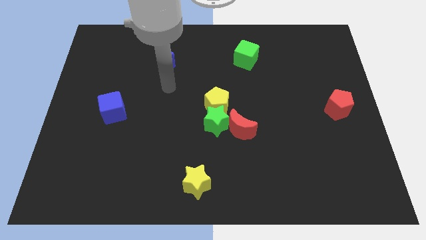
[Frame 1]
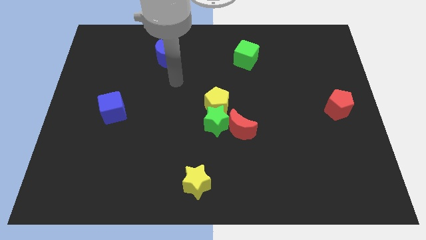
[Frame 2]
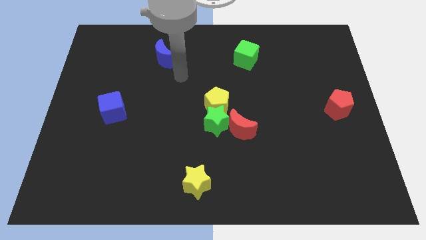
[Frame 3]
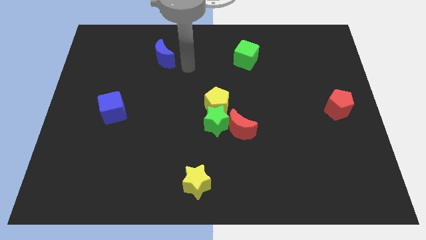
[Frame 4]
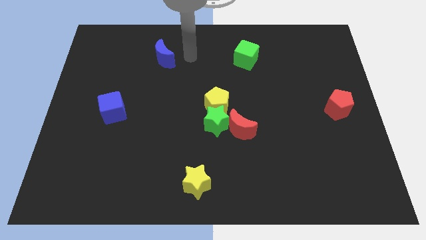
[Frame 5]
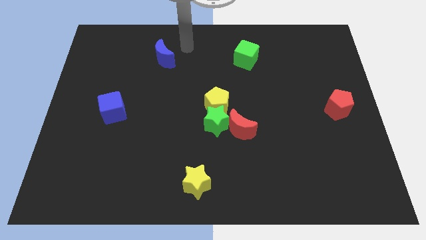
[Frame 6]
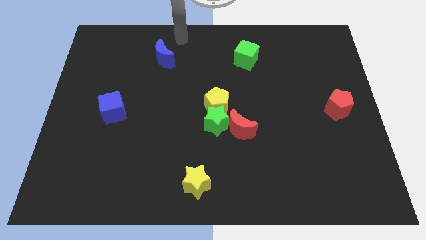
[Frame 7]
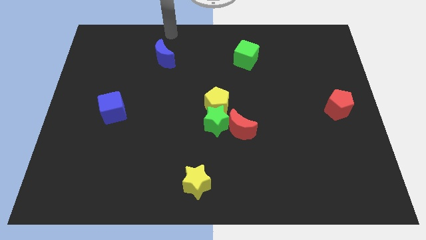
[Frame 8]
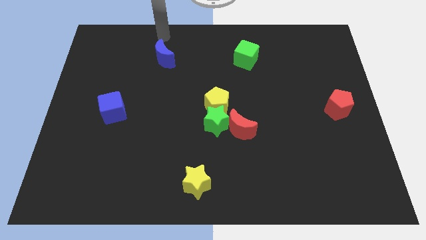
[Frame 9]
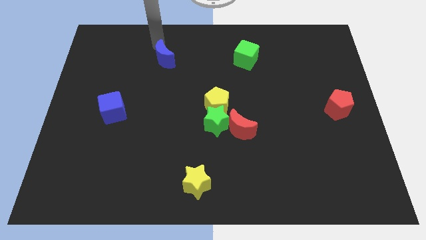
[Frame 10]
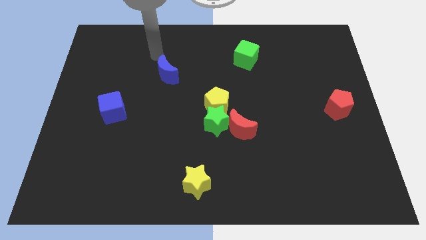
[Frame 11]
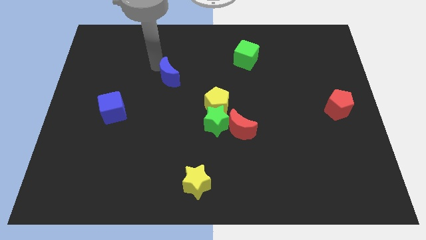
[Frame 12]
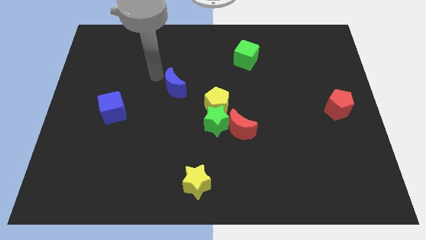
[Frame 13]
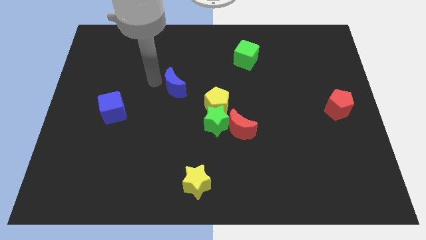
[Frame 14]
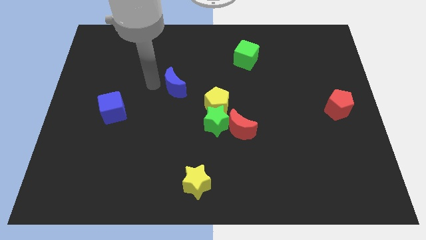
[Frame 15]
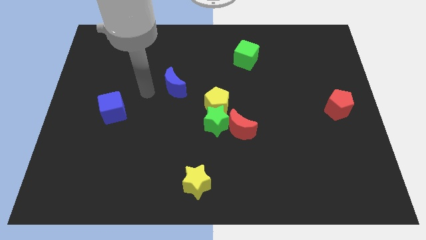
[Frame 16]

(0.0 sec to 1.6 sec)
move blue crescent diagonally bottom left to the green cube

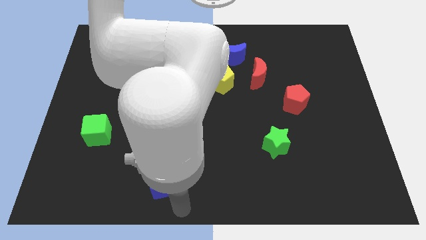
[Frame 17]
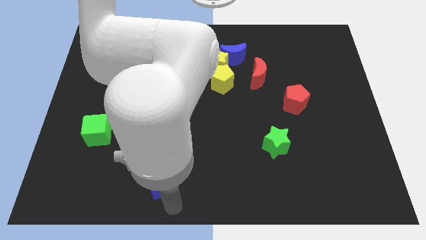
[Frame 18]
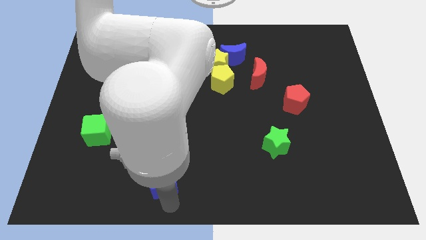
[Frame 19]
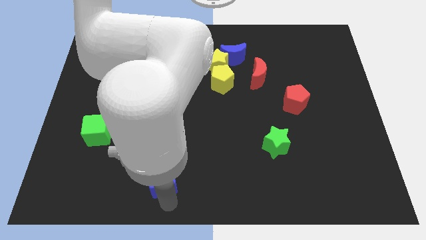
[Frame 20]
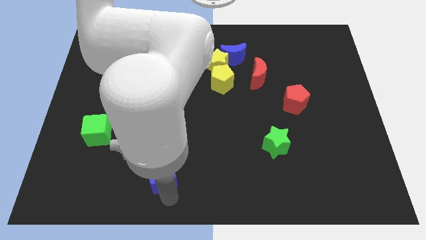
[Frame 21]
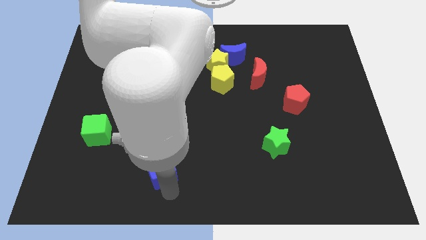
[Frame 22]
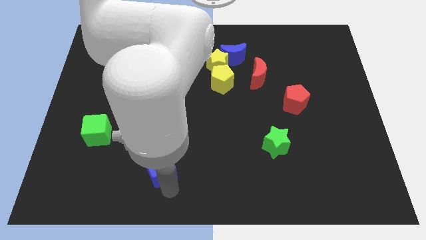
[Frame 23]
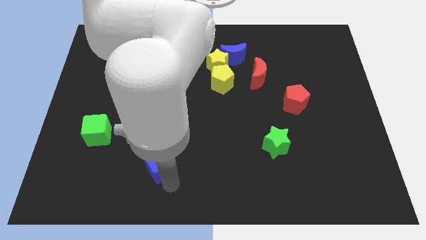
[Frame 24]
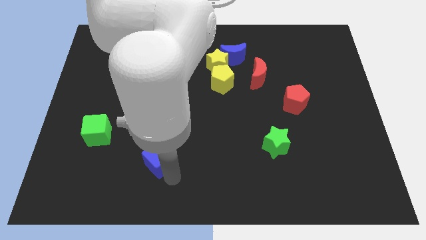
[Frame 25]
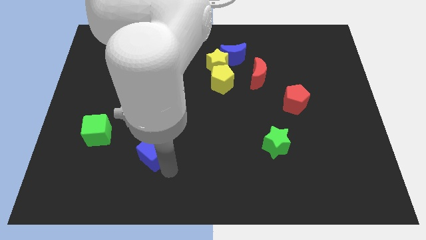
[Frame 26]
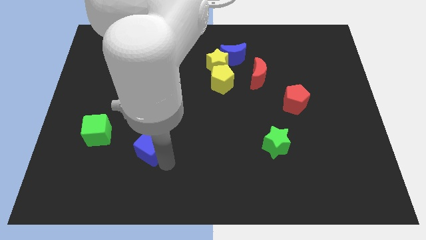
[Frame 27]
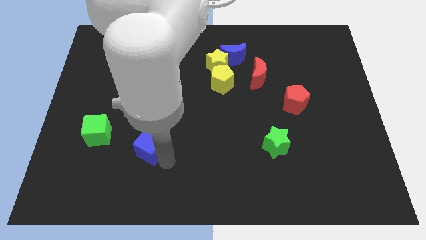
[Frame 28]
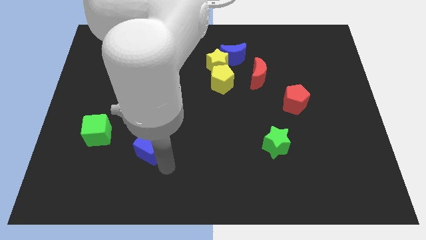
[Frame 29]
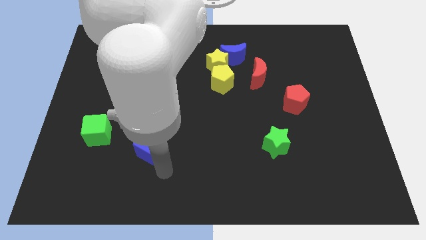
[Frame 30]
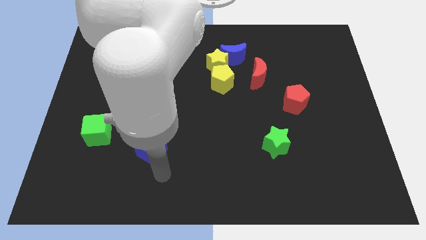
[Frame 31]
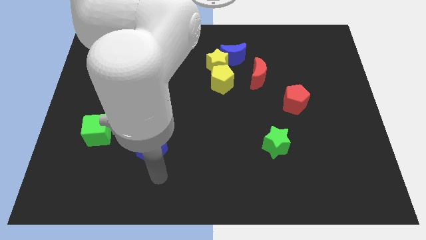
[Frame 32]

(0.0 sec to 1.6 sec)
put the blue cube horizontally to the left side of the green star

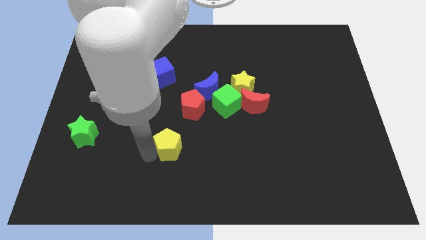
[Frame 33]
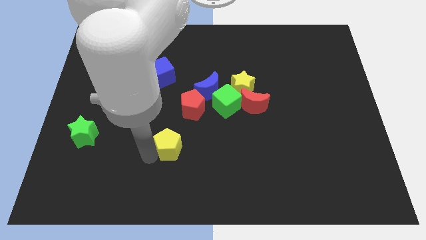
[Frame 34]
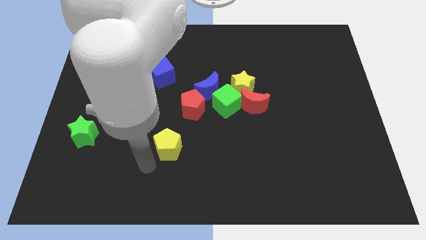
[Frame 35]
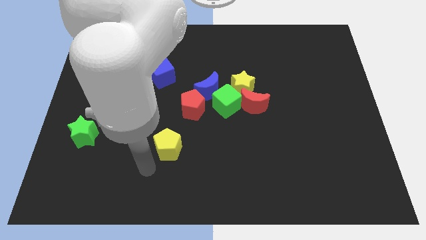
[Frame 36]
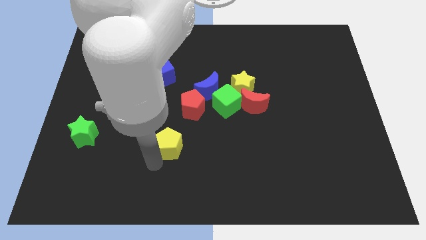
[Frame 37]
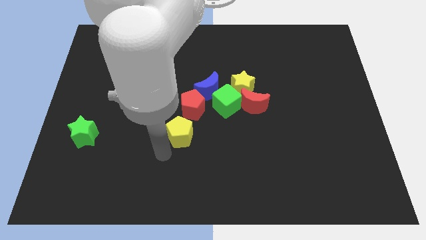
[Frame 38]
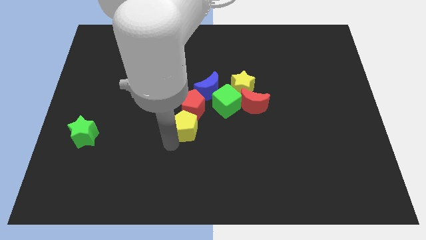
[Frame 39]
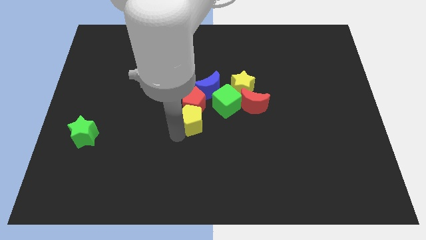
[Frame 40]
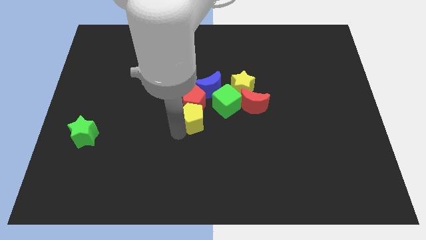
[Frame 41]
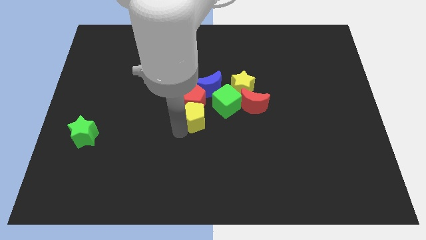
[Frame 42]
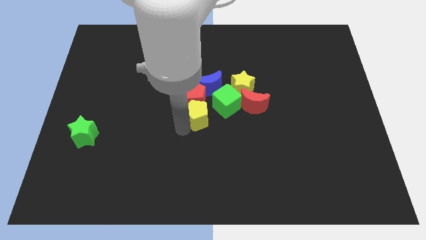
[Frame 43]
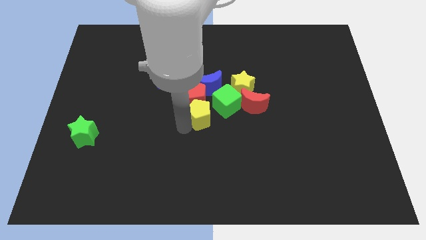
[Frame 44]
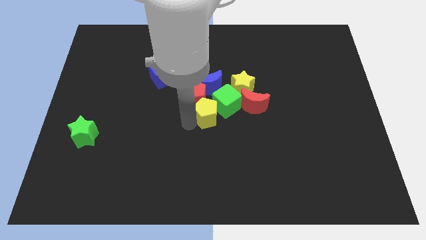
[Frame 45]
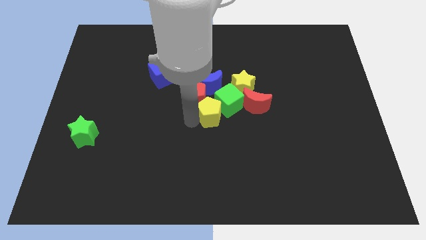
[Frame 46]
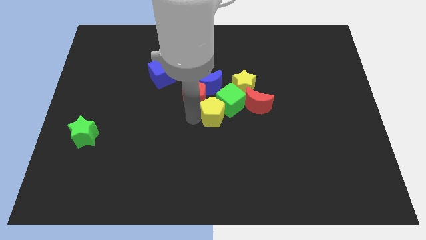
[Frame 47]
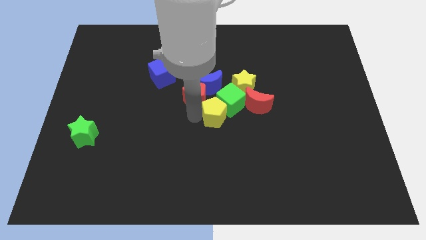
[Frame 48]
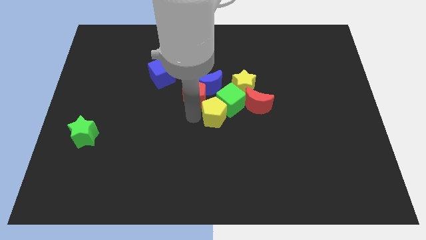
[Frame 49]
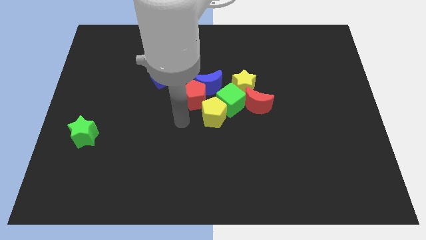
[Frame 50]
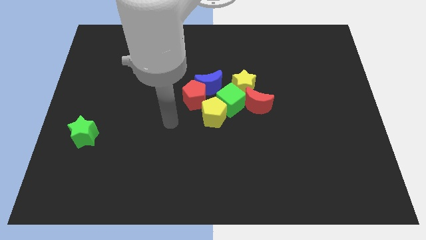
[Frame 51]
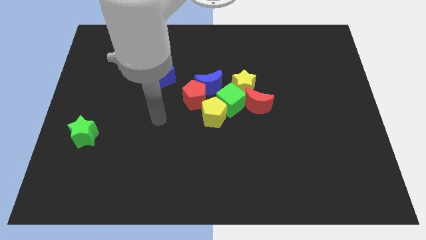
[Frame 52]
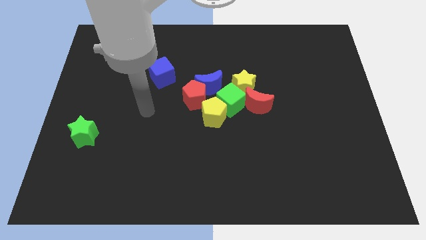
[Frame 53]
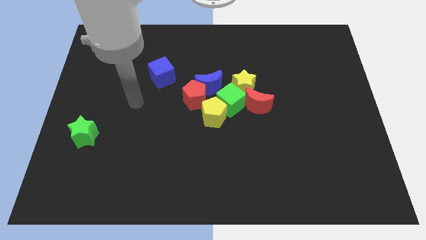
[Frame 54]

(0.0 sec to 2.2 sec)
move yellow pentagon into green cube

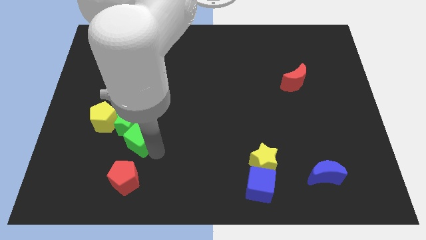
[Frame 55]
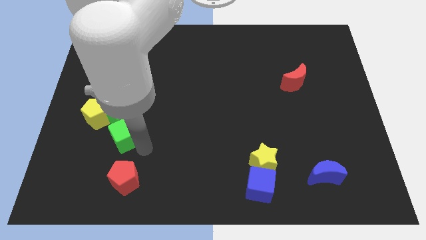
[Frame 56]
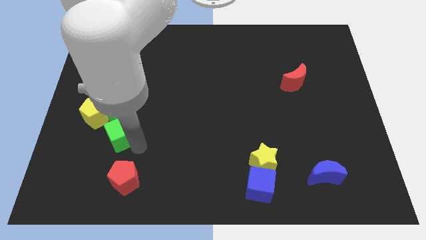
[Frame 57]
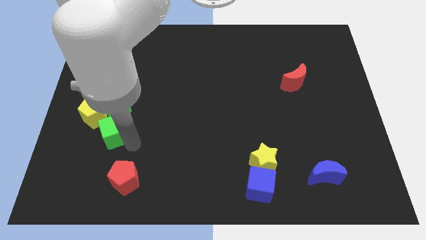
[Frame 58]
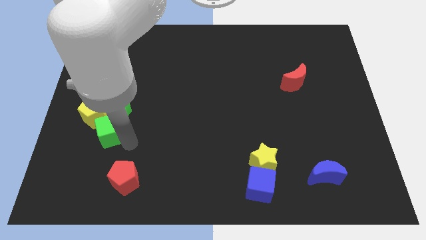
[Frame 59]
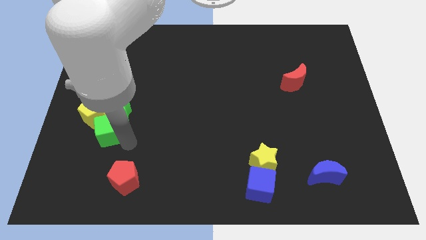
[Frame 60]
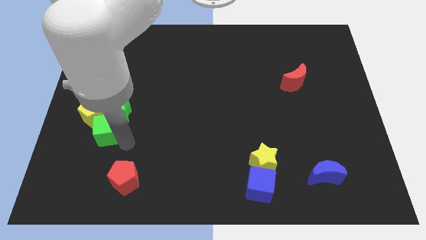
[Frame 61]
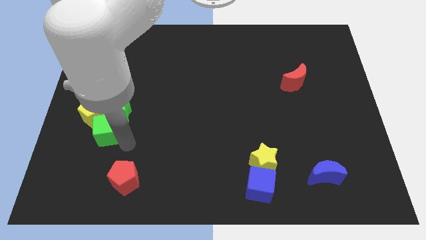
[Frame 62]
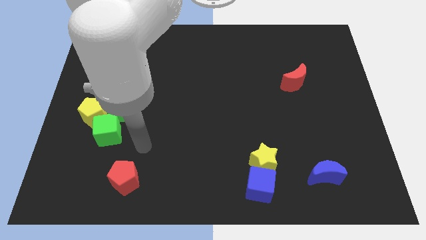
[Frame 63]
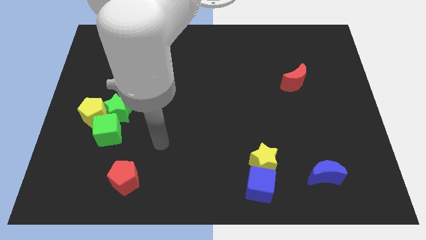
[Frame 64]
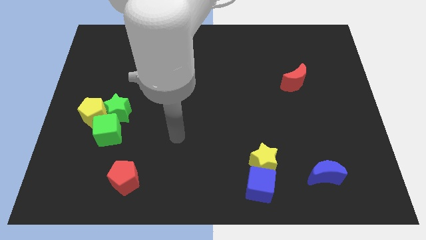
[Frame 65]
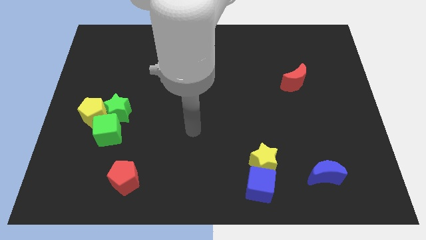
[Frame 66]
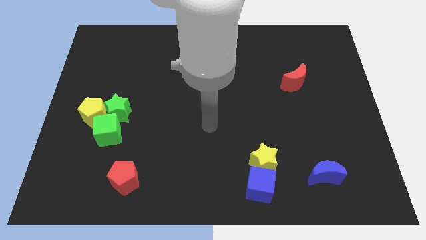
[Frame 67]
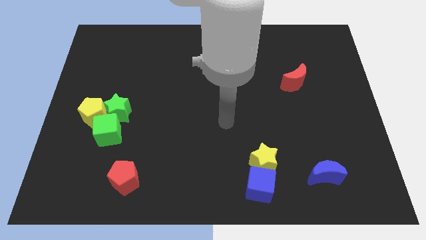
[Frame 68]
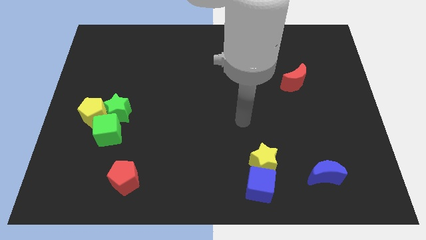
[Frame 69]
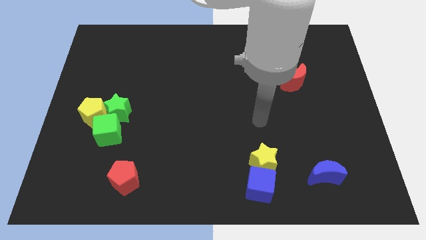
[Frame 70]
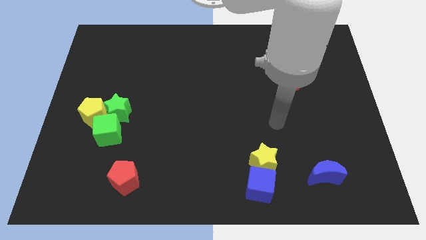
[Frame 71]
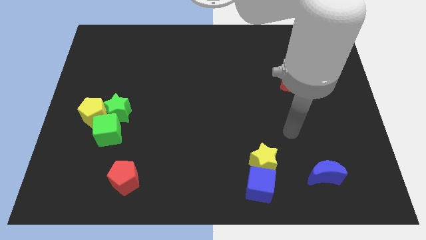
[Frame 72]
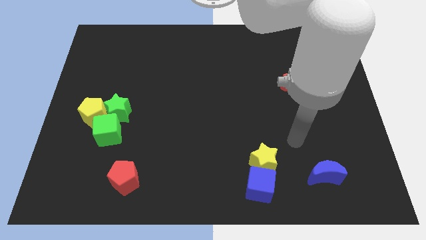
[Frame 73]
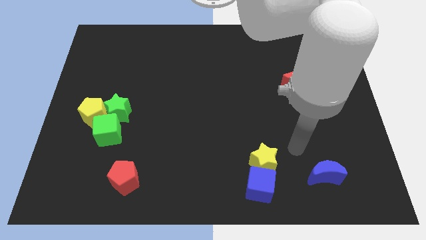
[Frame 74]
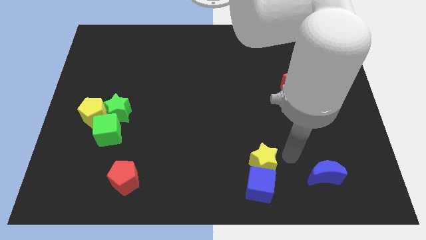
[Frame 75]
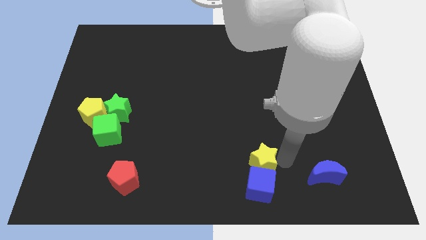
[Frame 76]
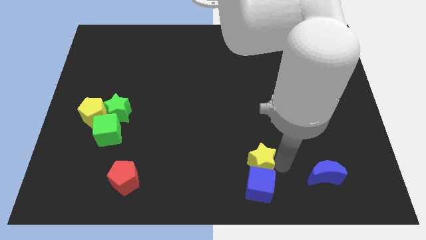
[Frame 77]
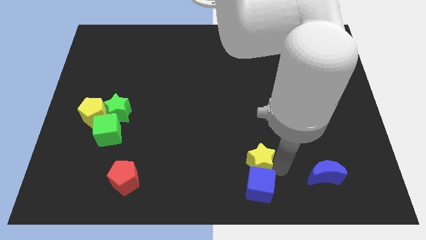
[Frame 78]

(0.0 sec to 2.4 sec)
push the green blocks into yellow penatgon to form a triangle

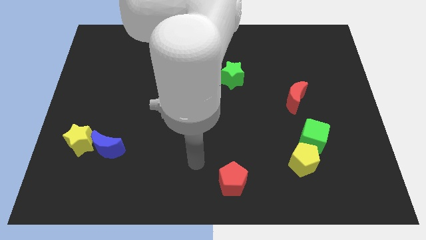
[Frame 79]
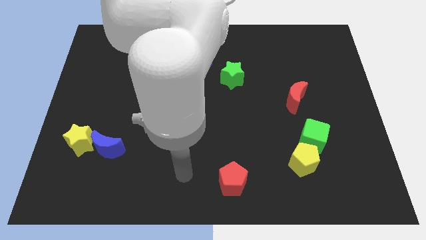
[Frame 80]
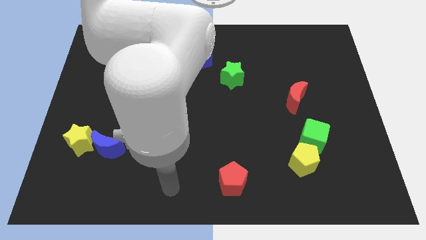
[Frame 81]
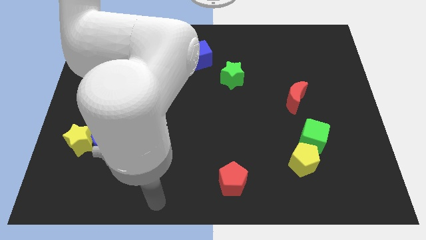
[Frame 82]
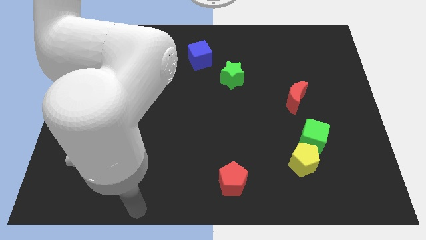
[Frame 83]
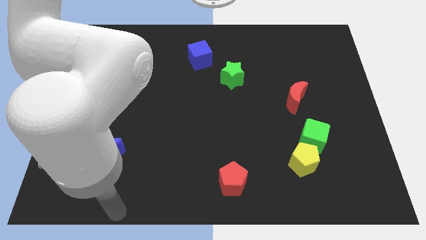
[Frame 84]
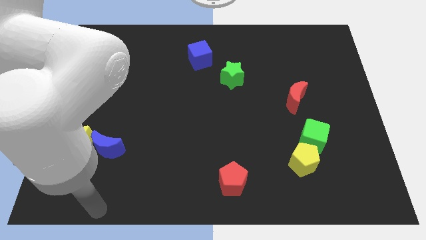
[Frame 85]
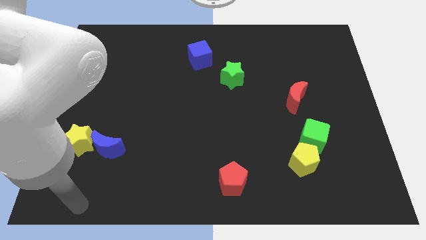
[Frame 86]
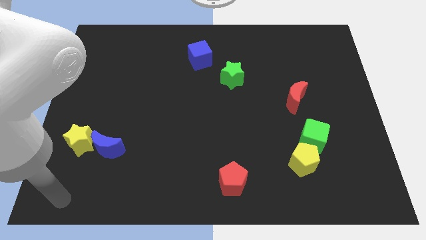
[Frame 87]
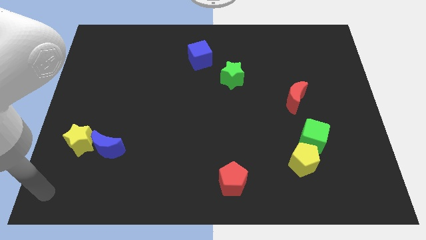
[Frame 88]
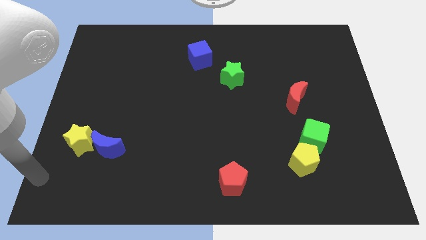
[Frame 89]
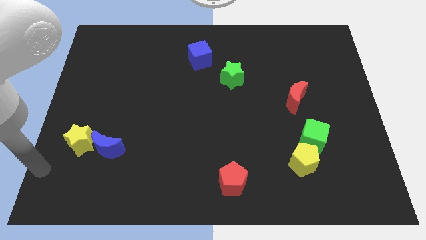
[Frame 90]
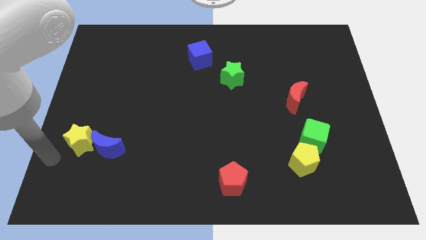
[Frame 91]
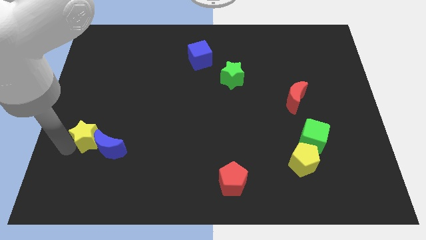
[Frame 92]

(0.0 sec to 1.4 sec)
place the arm left to the yellow star
